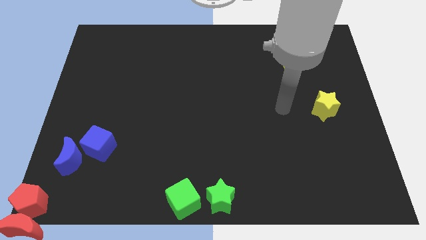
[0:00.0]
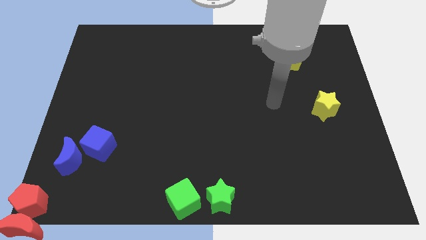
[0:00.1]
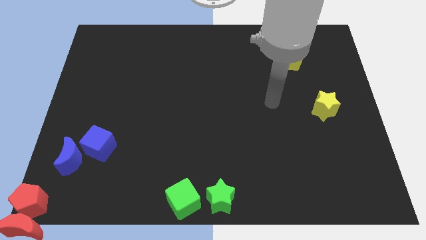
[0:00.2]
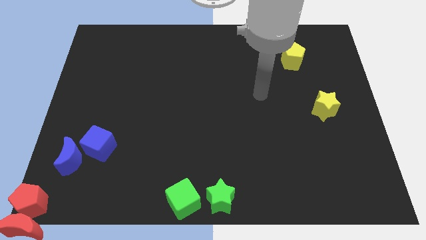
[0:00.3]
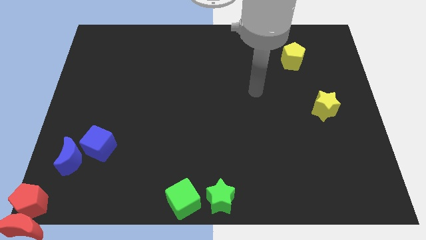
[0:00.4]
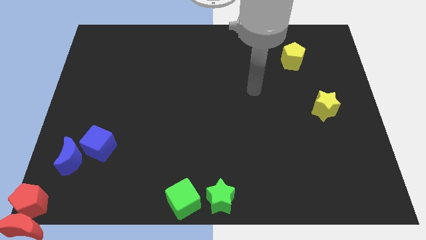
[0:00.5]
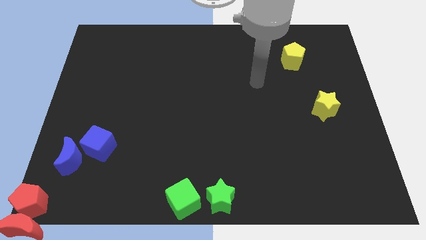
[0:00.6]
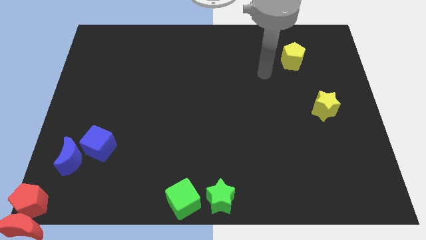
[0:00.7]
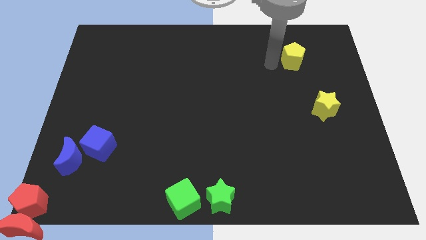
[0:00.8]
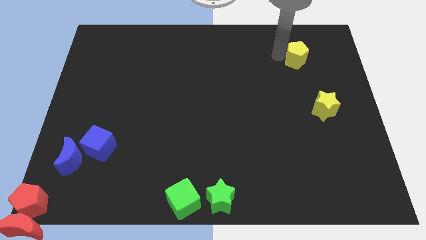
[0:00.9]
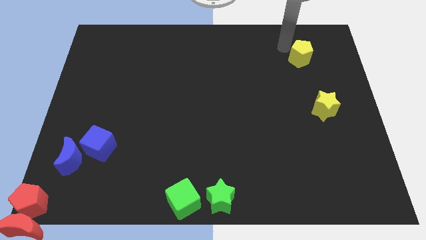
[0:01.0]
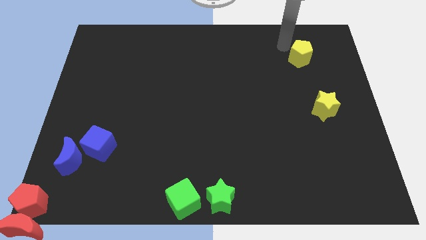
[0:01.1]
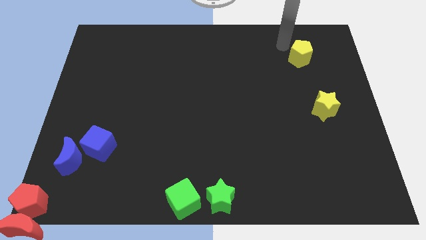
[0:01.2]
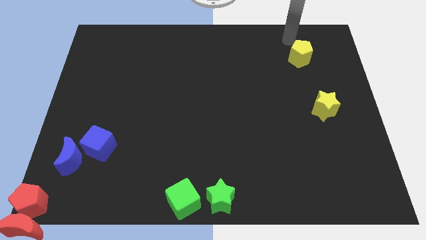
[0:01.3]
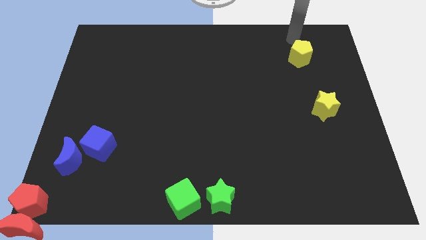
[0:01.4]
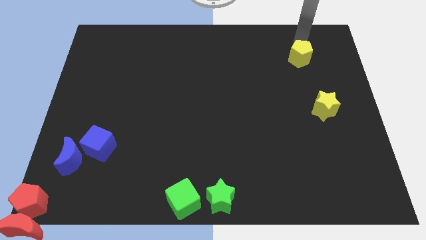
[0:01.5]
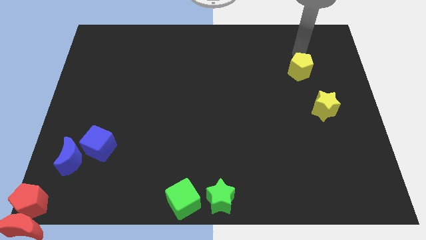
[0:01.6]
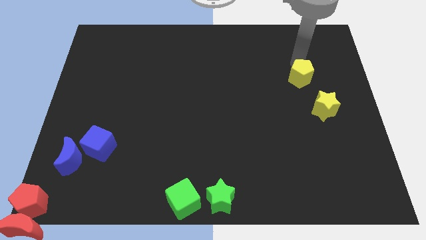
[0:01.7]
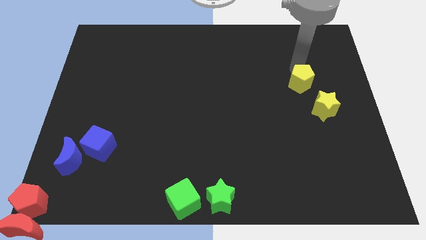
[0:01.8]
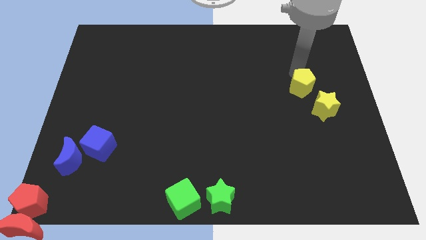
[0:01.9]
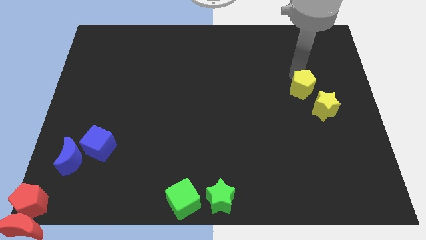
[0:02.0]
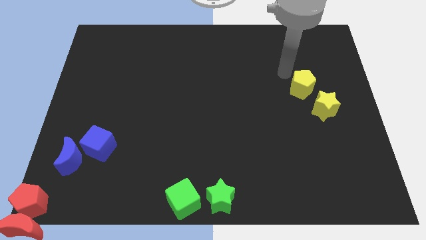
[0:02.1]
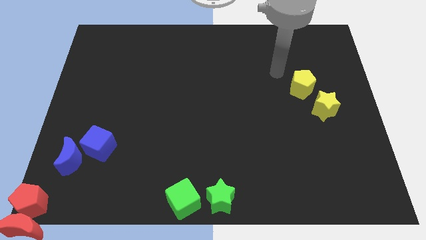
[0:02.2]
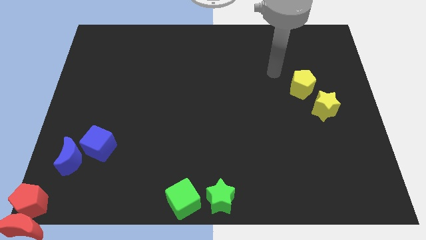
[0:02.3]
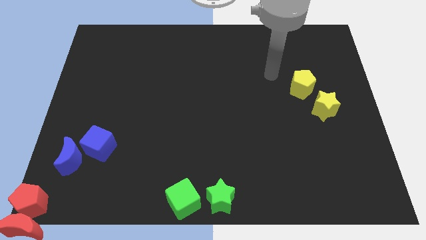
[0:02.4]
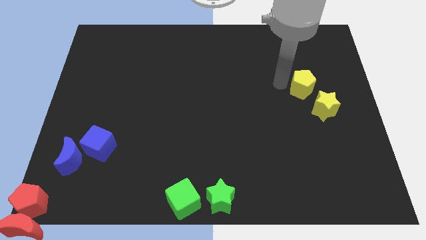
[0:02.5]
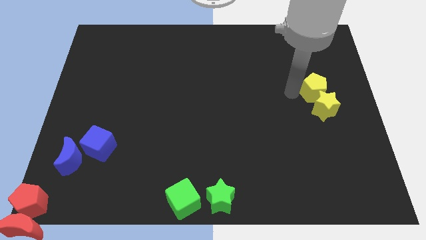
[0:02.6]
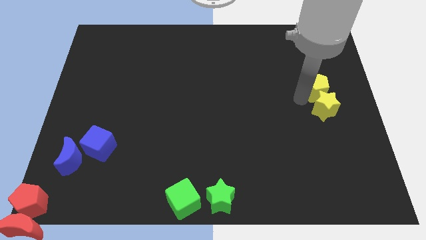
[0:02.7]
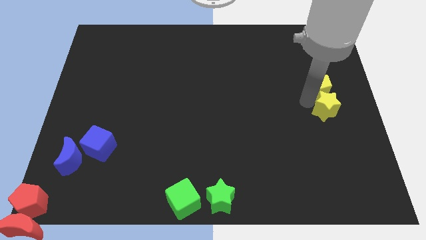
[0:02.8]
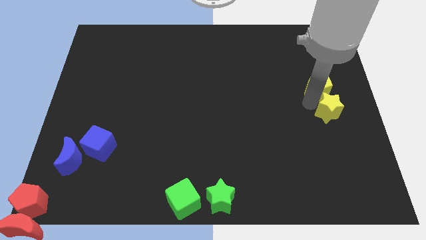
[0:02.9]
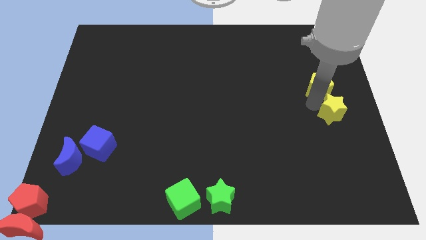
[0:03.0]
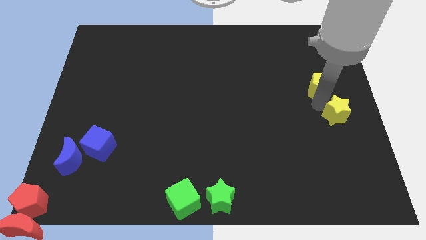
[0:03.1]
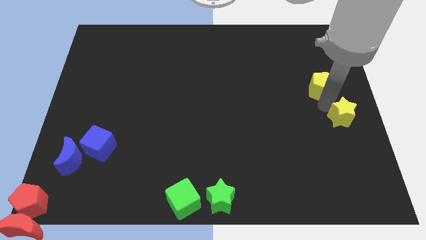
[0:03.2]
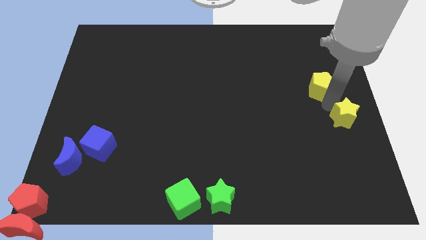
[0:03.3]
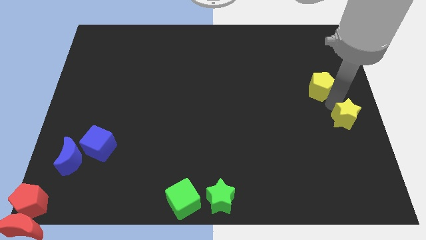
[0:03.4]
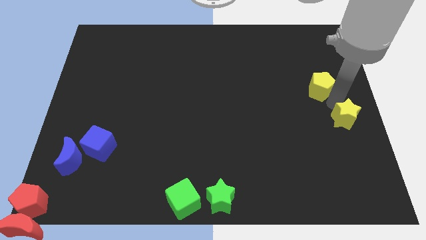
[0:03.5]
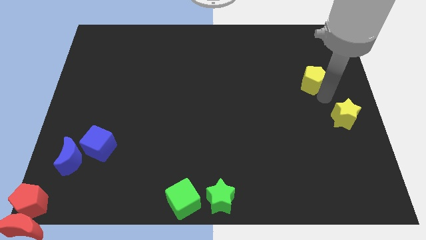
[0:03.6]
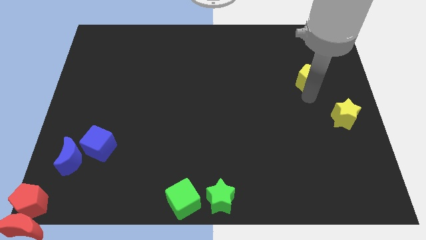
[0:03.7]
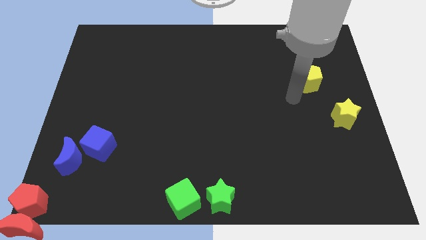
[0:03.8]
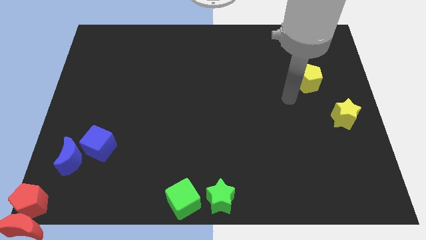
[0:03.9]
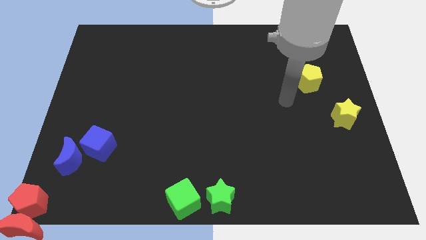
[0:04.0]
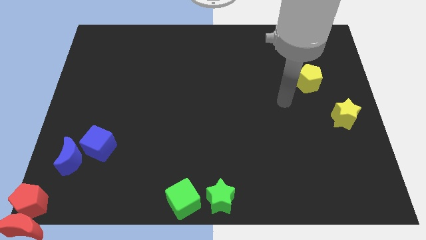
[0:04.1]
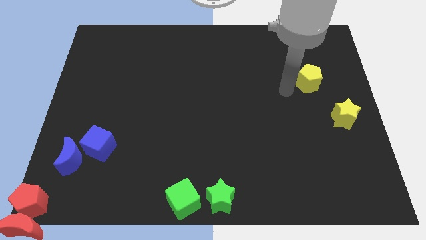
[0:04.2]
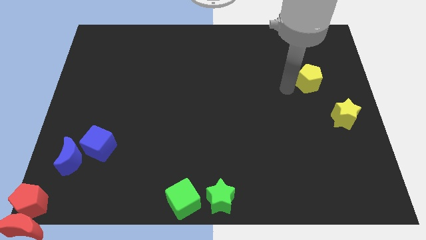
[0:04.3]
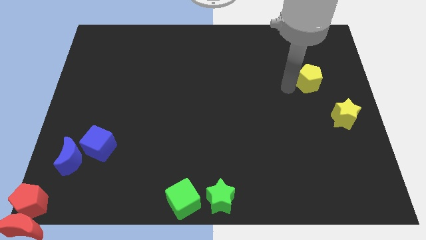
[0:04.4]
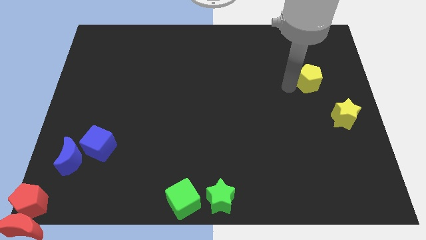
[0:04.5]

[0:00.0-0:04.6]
push the yellow star and yellow pentagon to right side

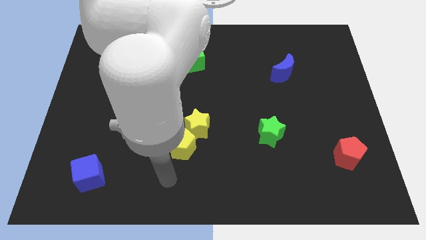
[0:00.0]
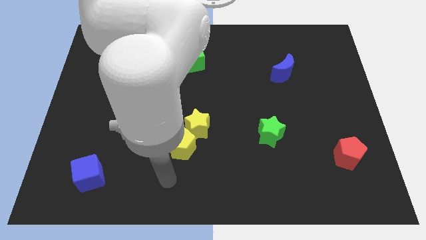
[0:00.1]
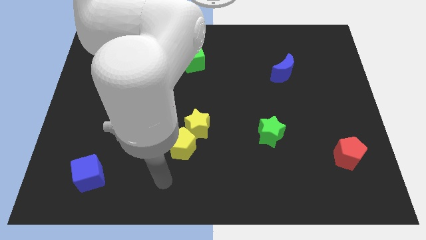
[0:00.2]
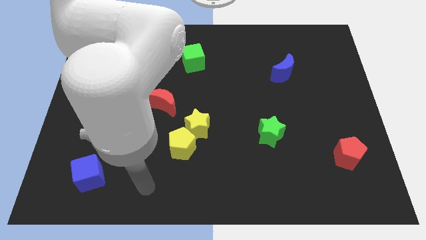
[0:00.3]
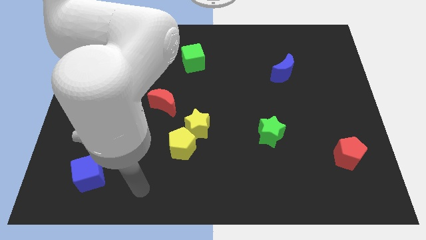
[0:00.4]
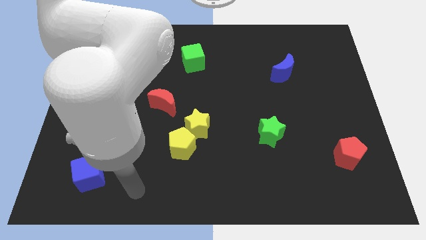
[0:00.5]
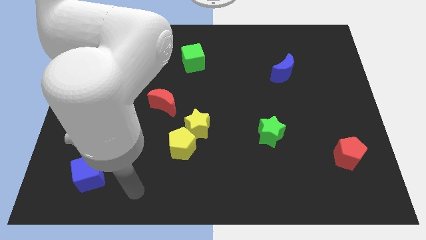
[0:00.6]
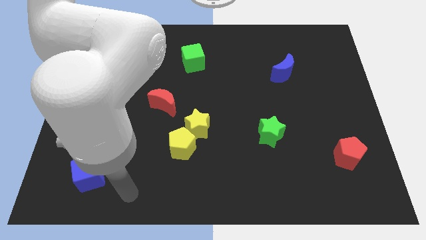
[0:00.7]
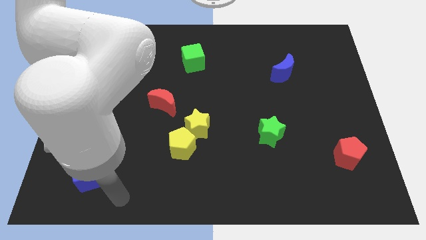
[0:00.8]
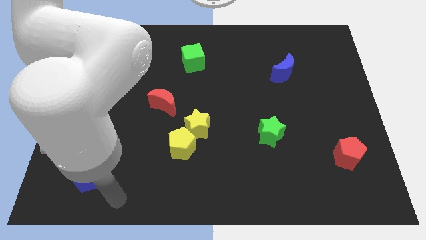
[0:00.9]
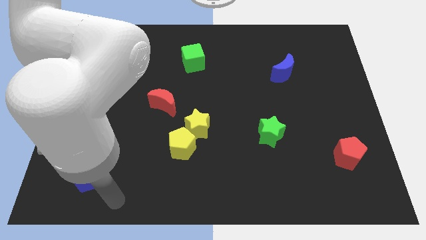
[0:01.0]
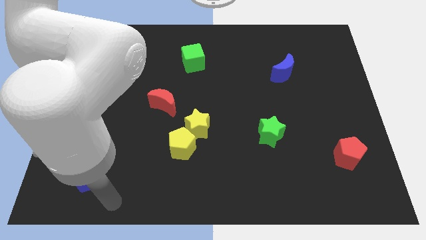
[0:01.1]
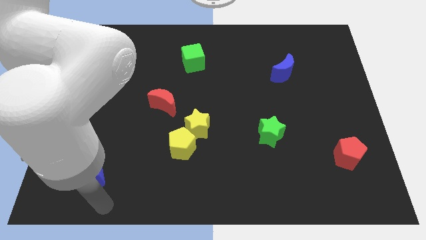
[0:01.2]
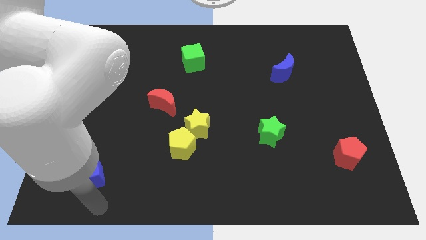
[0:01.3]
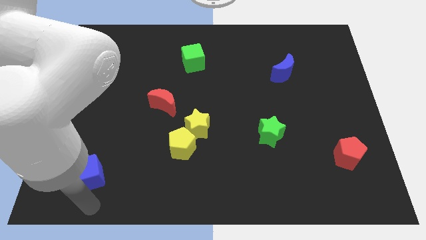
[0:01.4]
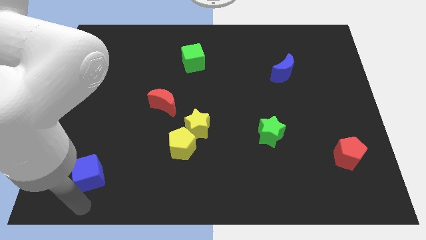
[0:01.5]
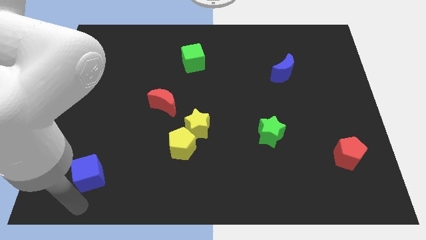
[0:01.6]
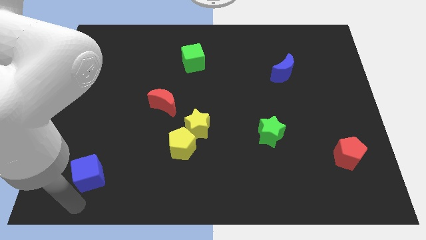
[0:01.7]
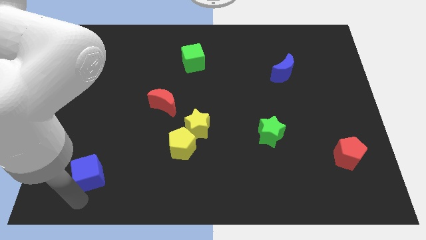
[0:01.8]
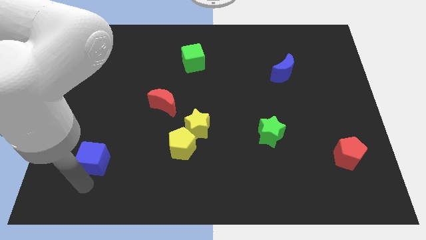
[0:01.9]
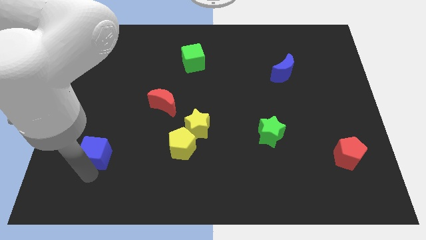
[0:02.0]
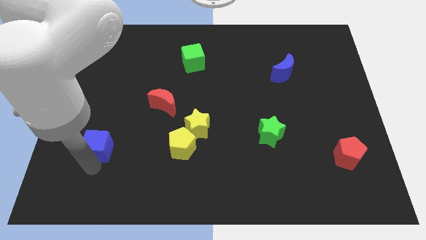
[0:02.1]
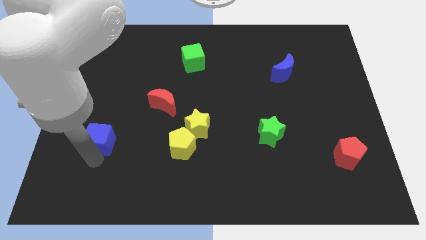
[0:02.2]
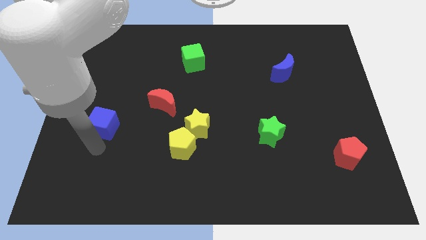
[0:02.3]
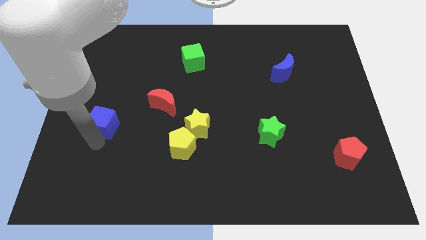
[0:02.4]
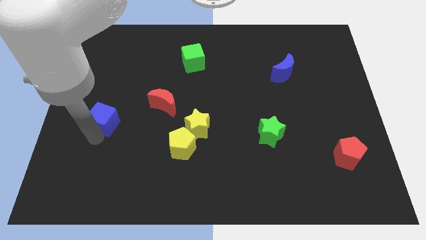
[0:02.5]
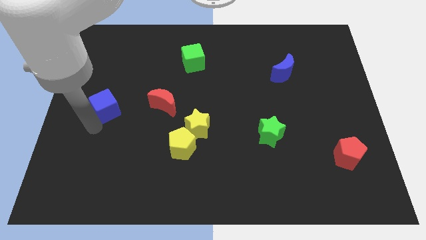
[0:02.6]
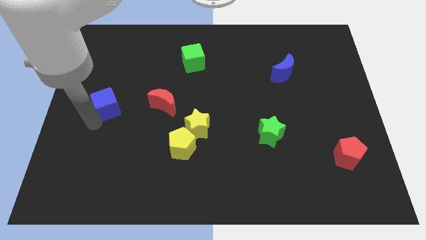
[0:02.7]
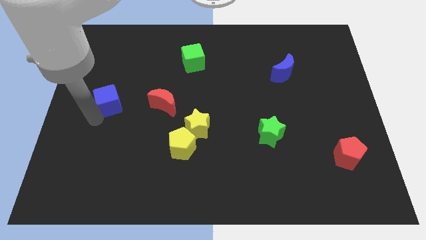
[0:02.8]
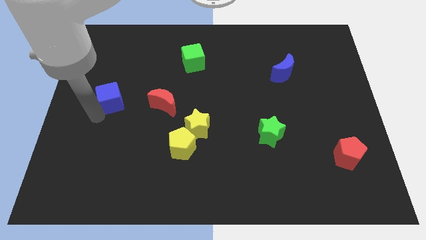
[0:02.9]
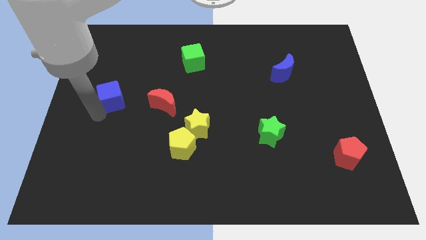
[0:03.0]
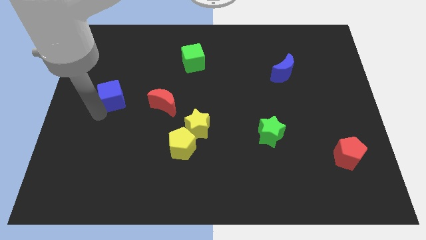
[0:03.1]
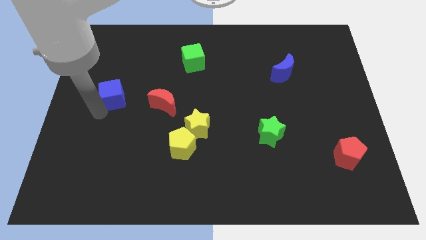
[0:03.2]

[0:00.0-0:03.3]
move the blue cube to the left of the red moon

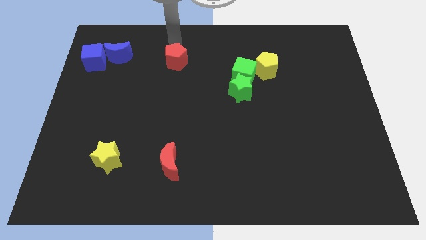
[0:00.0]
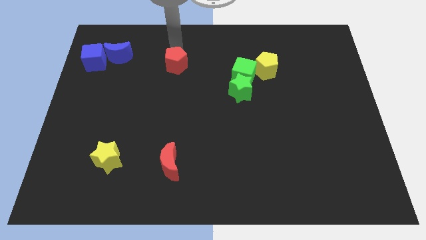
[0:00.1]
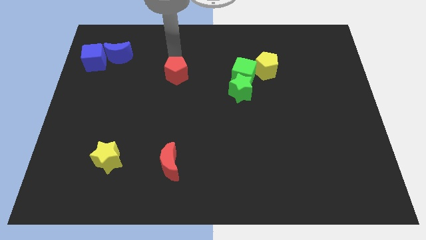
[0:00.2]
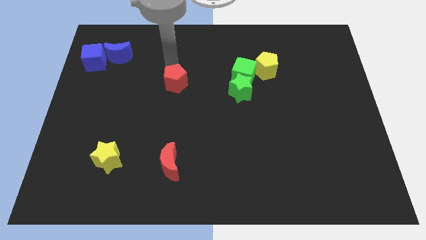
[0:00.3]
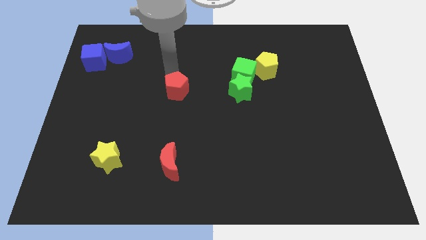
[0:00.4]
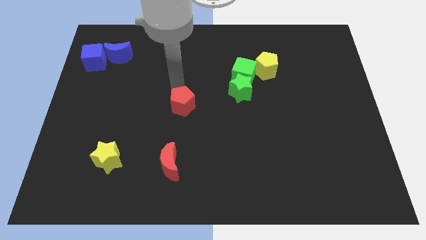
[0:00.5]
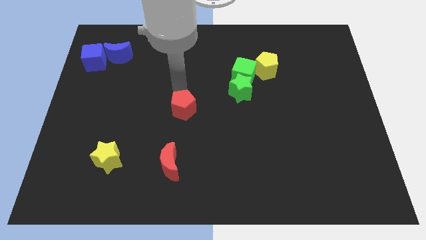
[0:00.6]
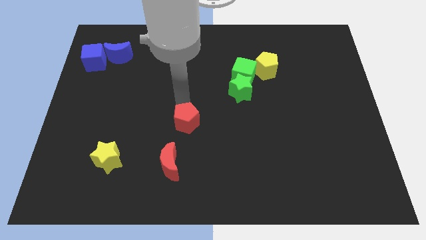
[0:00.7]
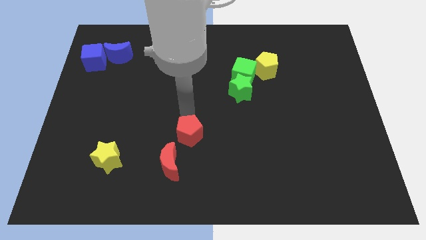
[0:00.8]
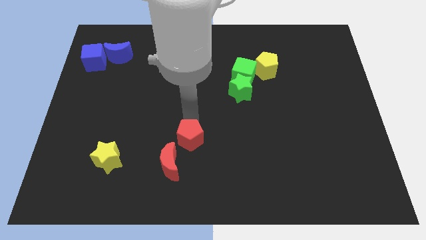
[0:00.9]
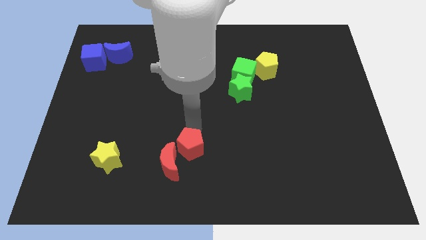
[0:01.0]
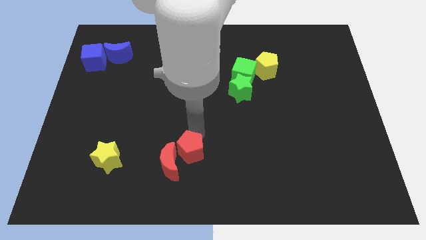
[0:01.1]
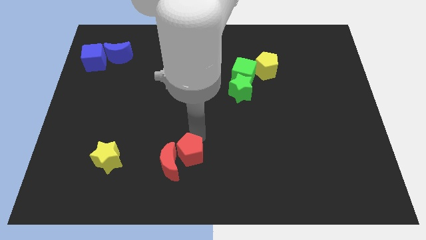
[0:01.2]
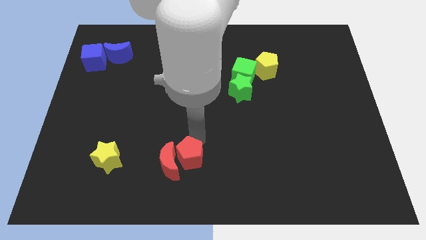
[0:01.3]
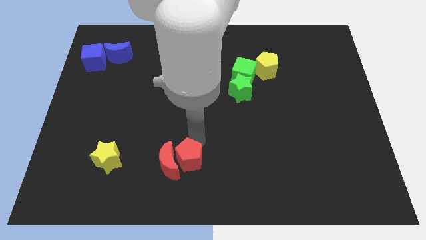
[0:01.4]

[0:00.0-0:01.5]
move the red pentagon to the right side of the red crescent
